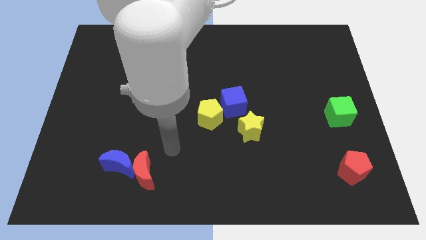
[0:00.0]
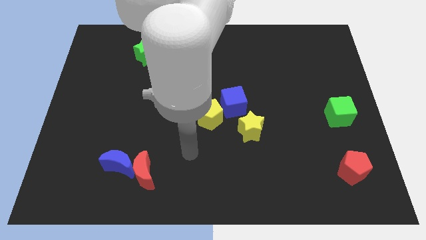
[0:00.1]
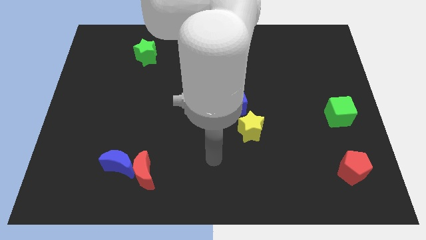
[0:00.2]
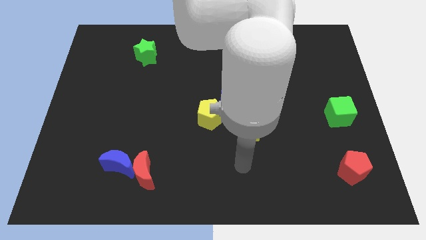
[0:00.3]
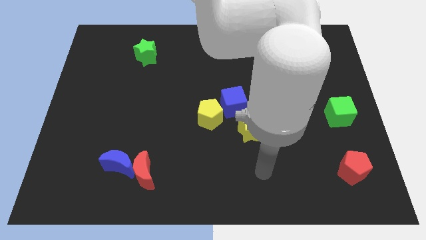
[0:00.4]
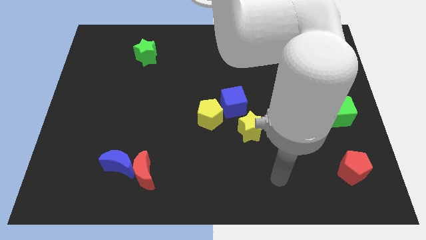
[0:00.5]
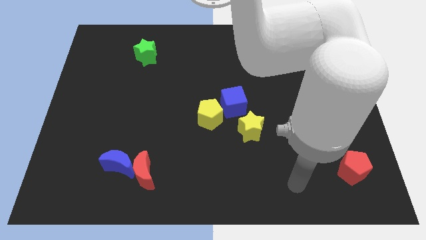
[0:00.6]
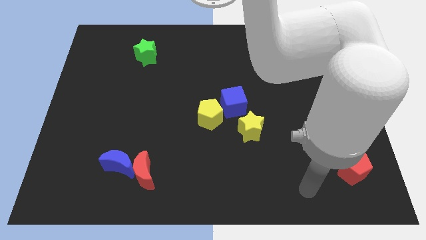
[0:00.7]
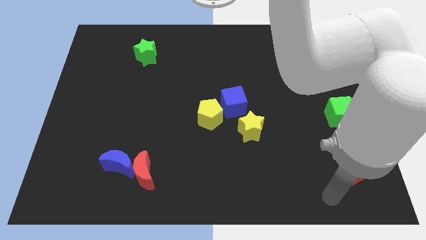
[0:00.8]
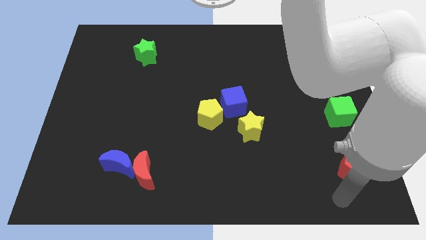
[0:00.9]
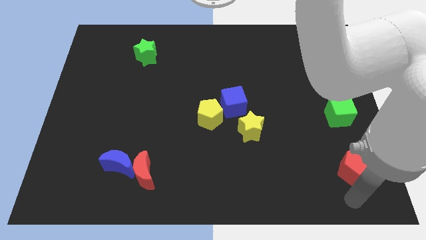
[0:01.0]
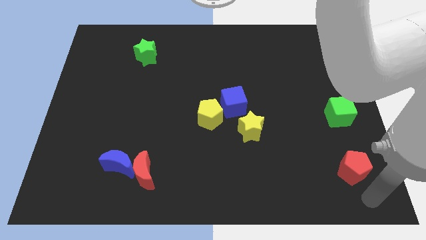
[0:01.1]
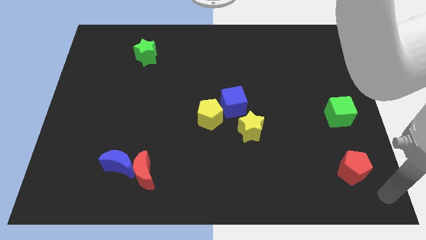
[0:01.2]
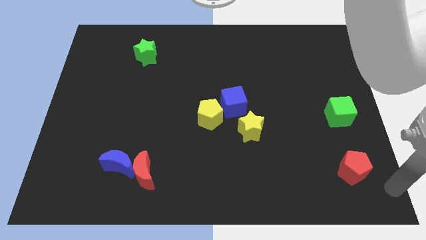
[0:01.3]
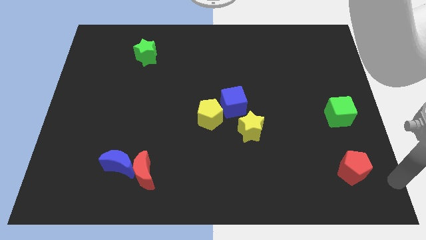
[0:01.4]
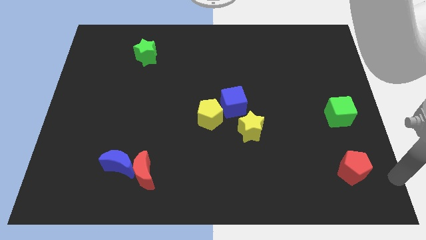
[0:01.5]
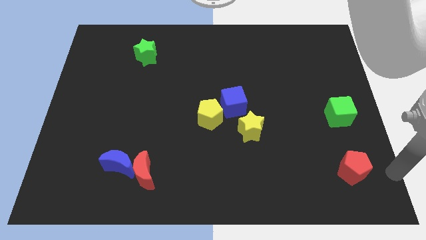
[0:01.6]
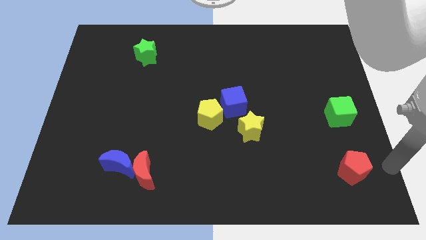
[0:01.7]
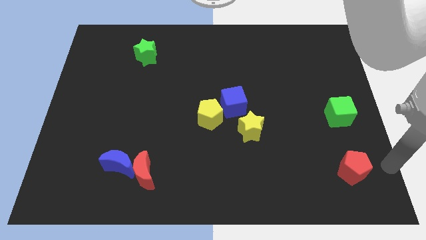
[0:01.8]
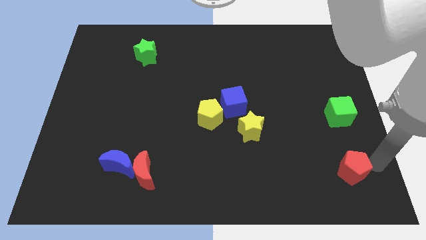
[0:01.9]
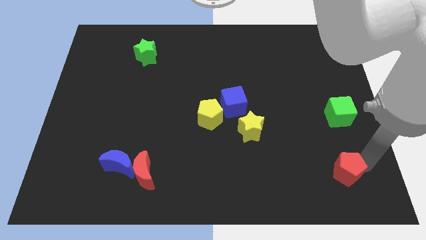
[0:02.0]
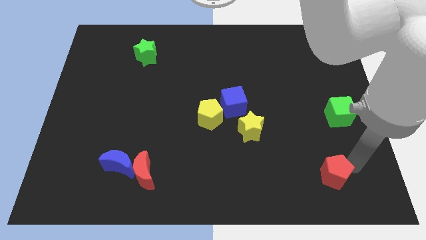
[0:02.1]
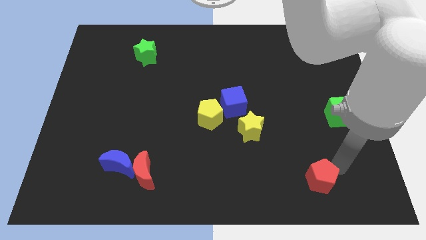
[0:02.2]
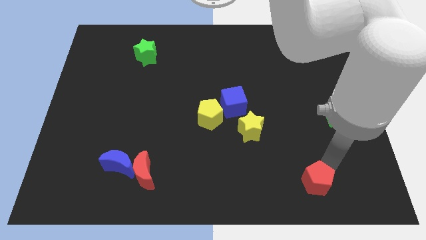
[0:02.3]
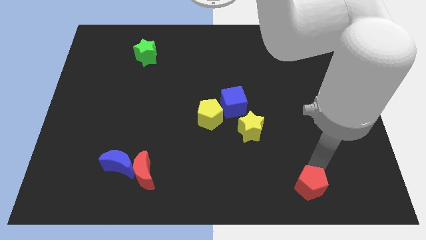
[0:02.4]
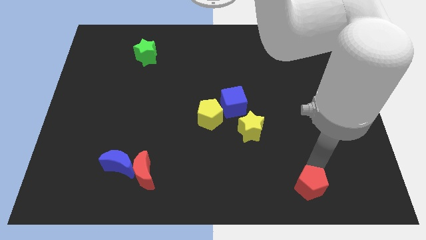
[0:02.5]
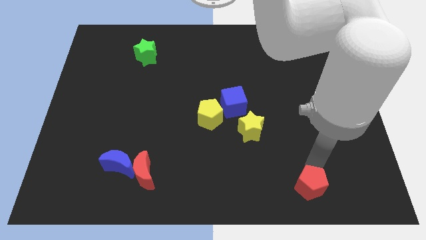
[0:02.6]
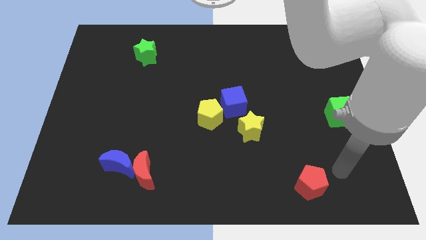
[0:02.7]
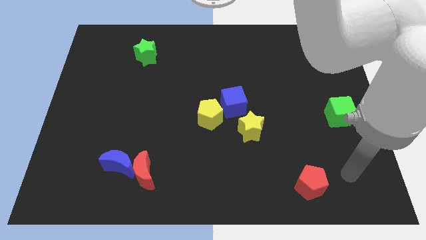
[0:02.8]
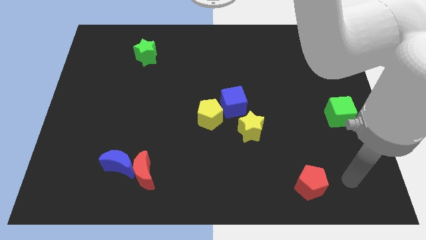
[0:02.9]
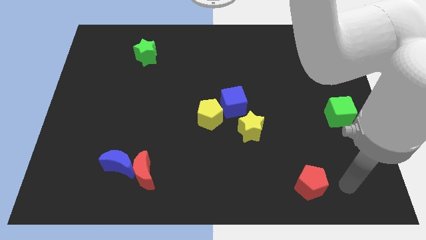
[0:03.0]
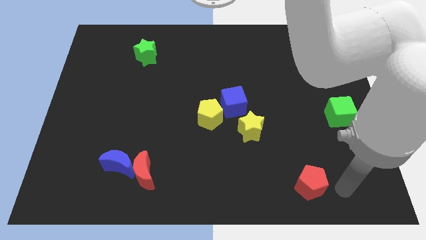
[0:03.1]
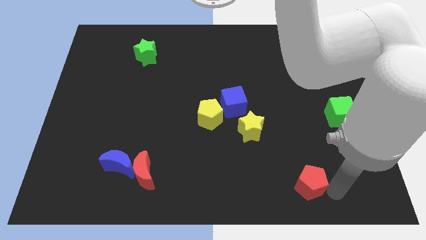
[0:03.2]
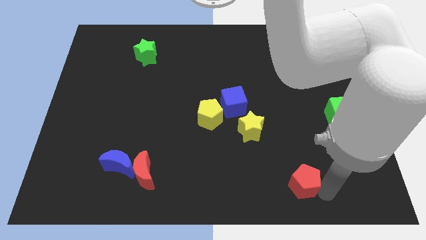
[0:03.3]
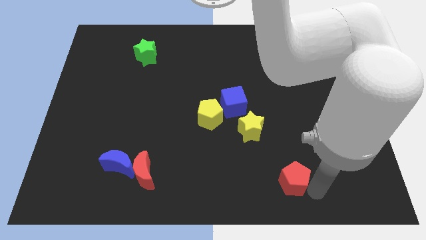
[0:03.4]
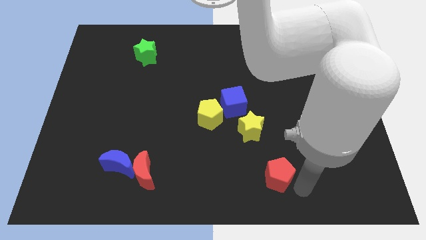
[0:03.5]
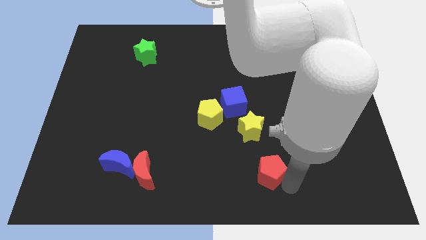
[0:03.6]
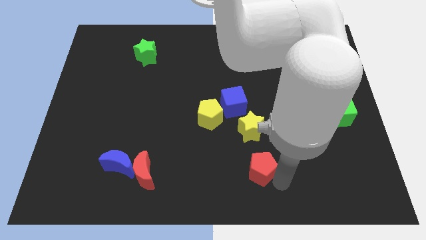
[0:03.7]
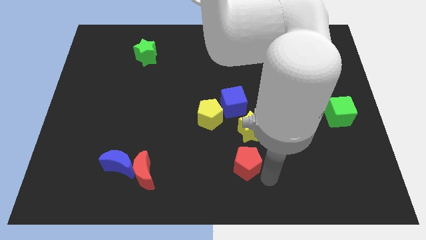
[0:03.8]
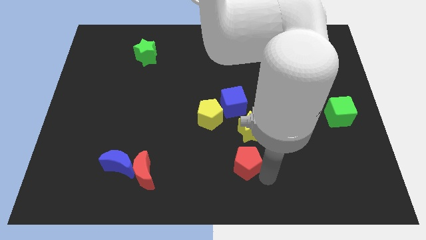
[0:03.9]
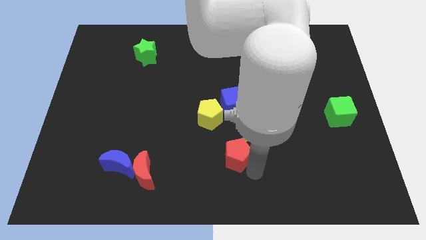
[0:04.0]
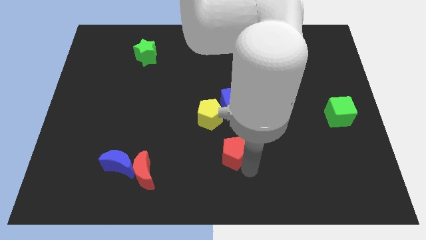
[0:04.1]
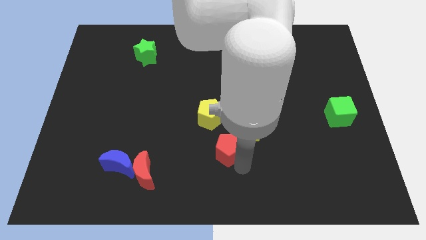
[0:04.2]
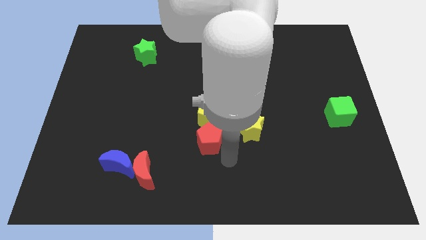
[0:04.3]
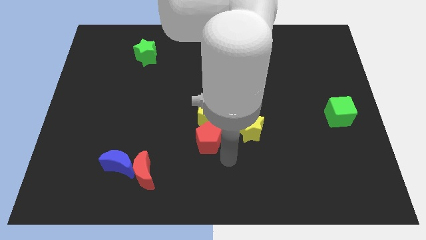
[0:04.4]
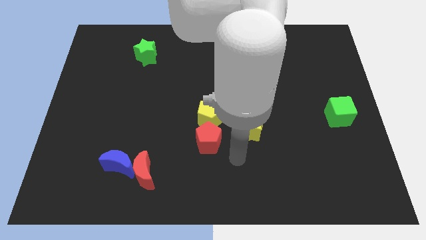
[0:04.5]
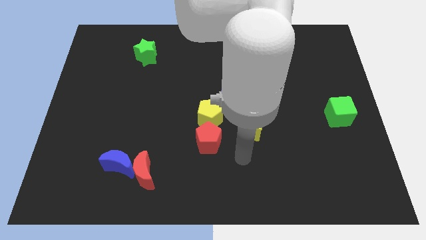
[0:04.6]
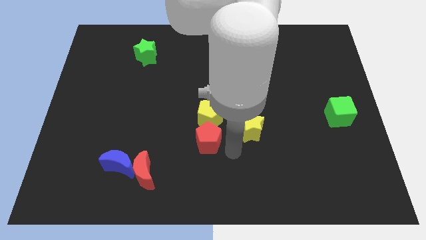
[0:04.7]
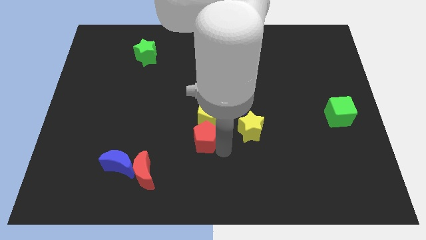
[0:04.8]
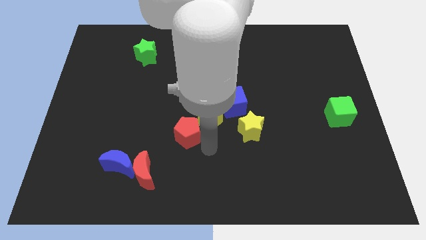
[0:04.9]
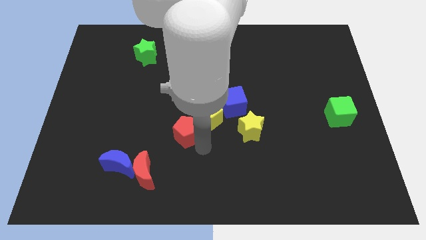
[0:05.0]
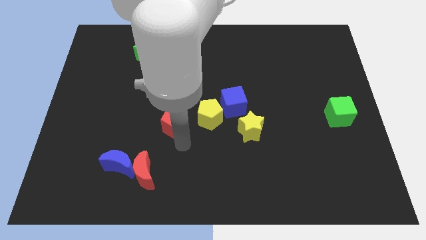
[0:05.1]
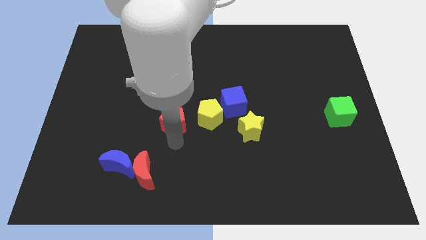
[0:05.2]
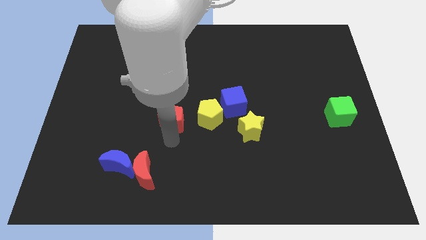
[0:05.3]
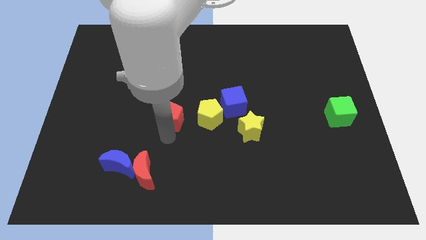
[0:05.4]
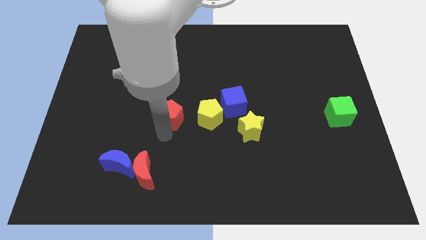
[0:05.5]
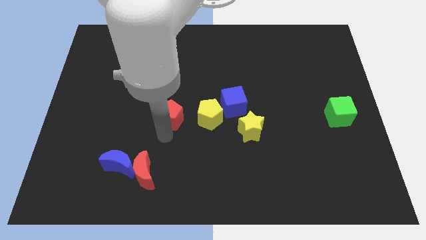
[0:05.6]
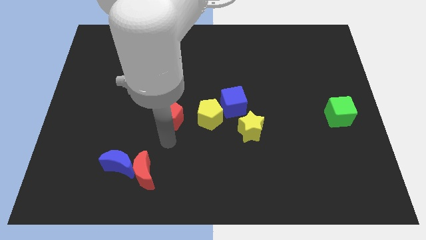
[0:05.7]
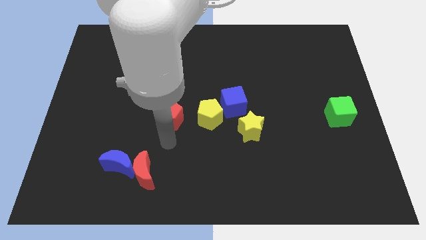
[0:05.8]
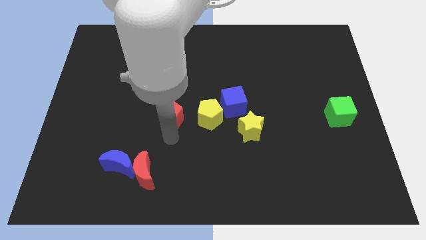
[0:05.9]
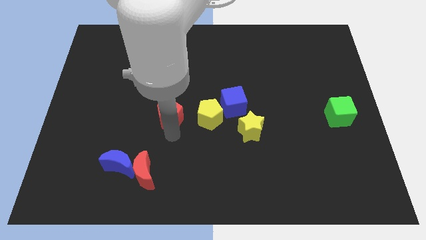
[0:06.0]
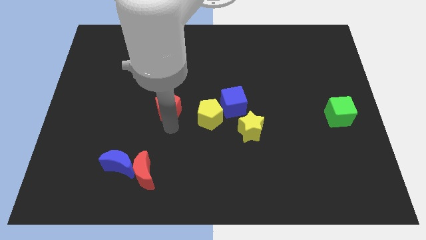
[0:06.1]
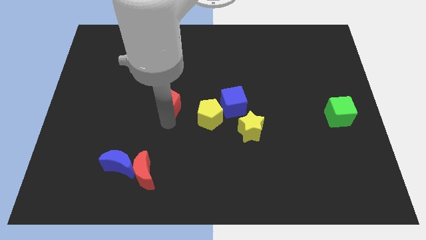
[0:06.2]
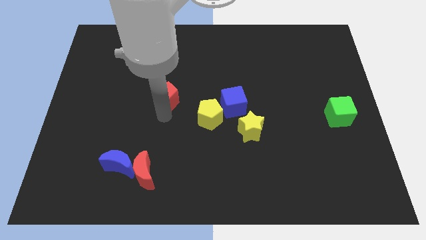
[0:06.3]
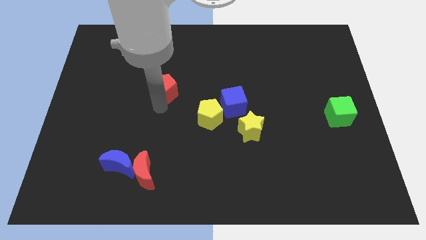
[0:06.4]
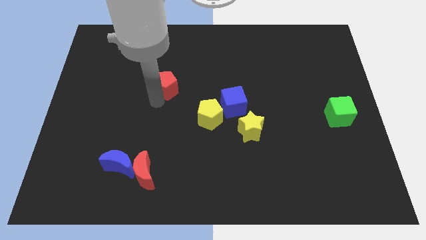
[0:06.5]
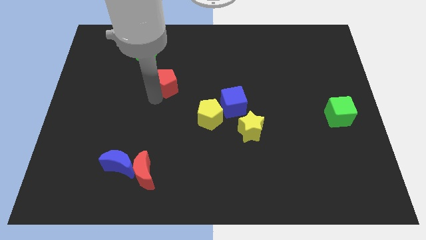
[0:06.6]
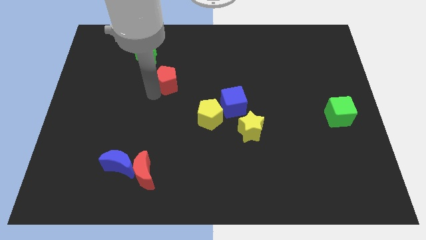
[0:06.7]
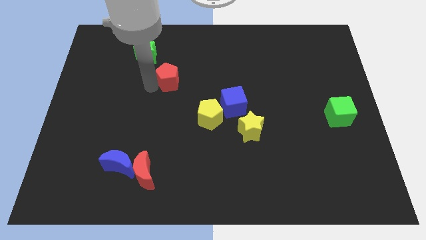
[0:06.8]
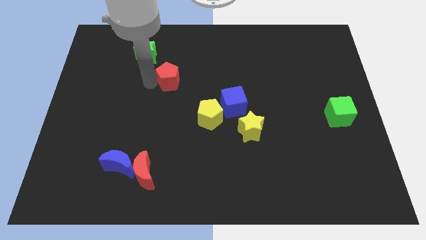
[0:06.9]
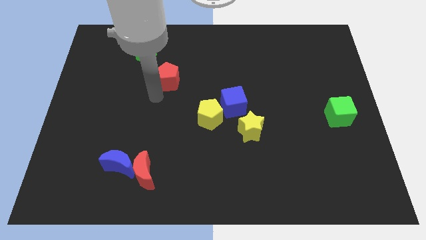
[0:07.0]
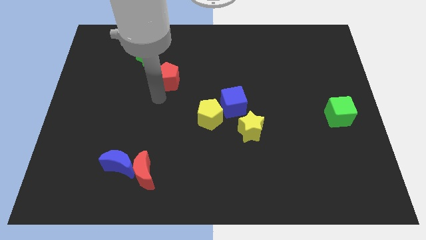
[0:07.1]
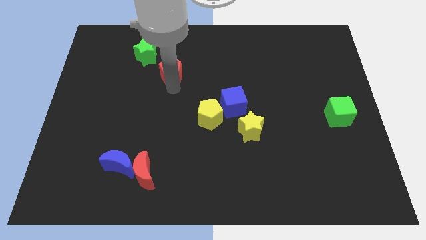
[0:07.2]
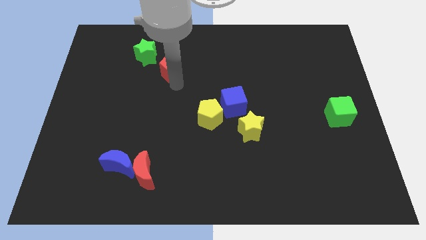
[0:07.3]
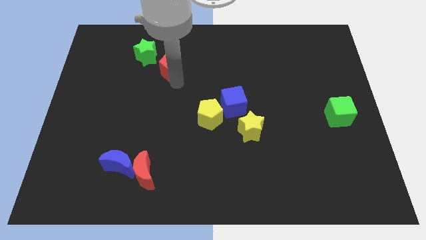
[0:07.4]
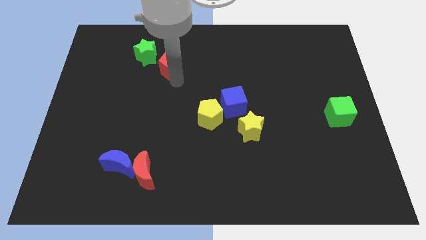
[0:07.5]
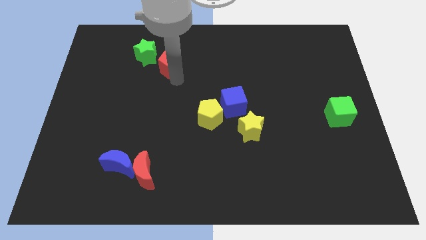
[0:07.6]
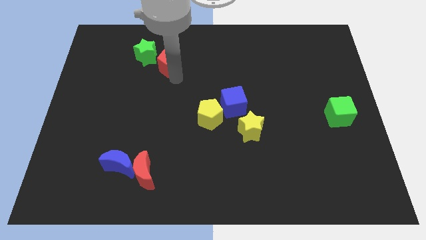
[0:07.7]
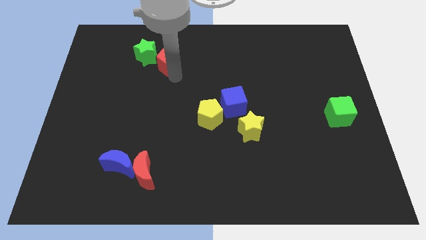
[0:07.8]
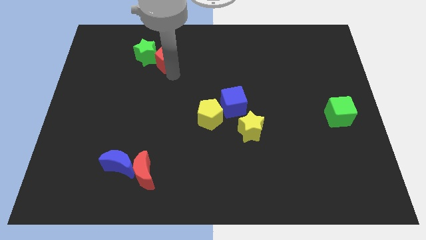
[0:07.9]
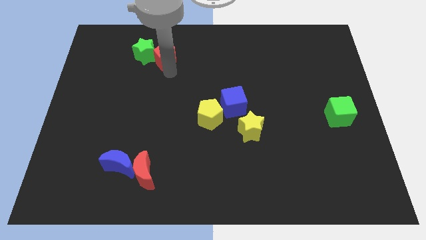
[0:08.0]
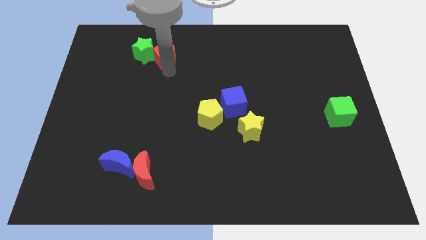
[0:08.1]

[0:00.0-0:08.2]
push the red pentagon close to the green star
